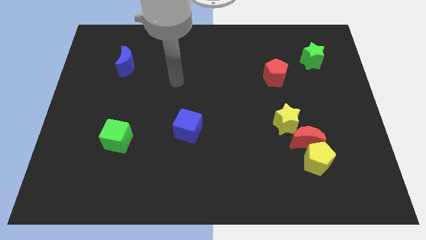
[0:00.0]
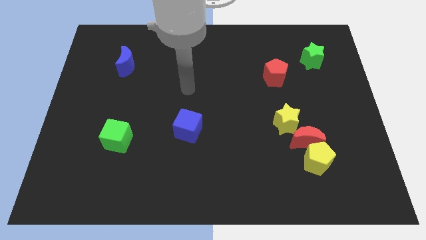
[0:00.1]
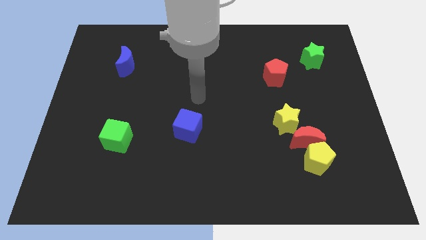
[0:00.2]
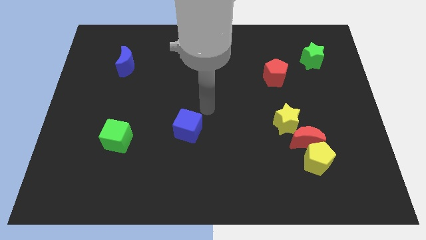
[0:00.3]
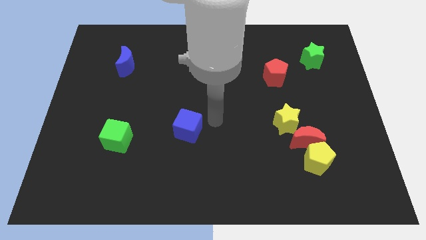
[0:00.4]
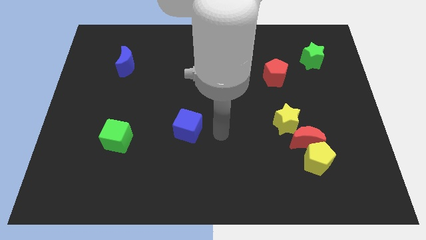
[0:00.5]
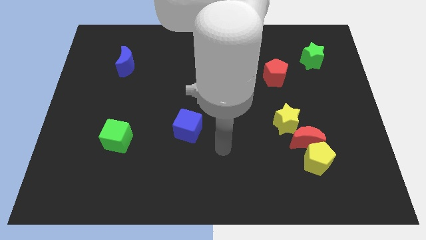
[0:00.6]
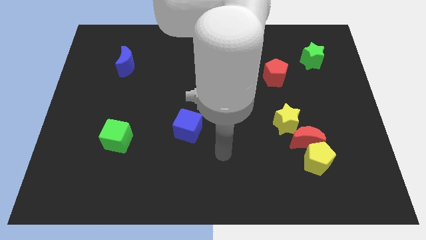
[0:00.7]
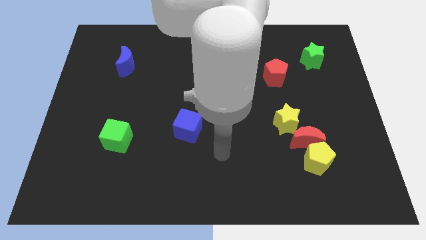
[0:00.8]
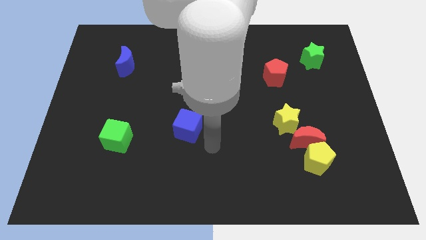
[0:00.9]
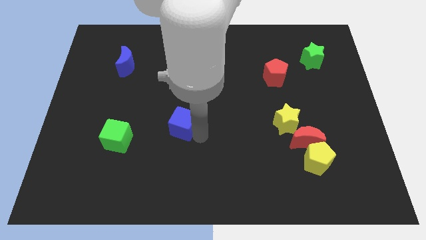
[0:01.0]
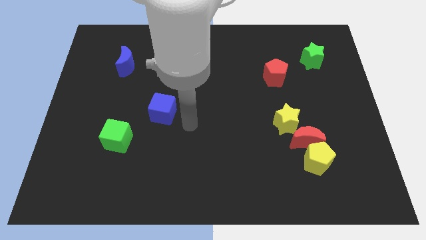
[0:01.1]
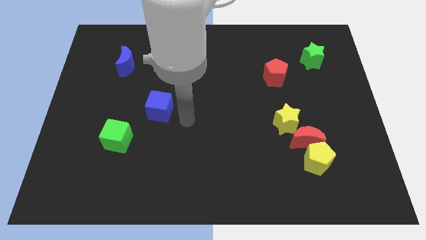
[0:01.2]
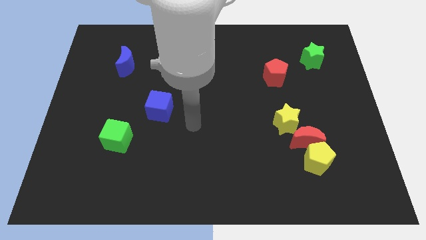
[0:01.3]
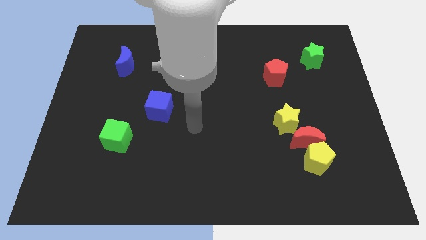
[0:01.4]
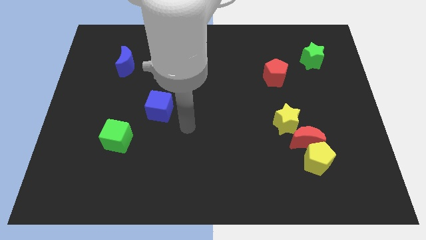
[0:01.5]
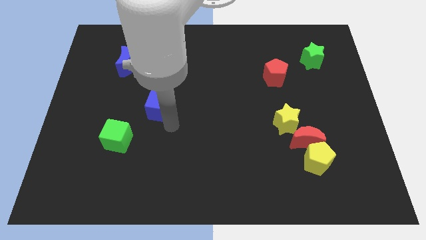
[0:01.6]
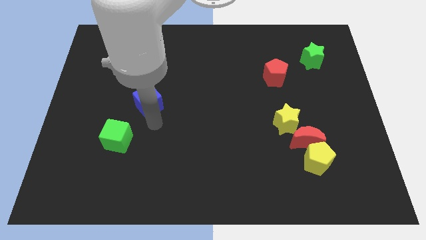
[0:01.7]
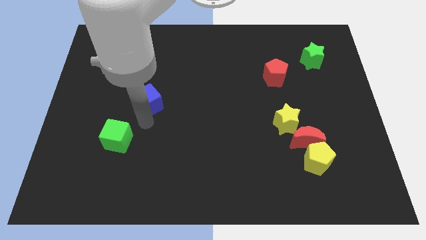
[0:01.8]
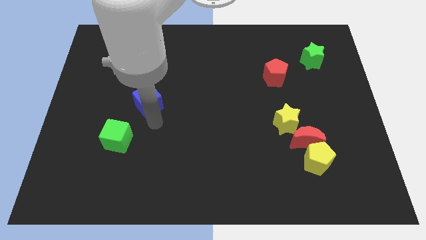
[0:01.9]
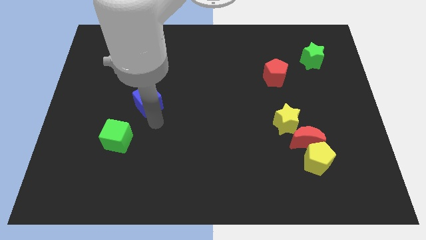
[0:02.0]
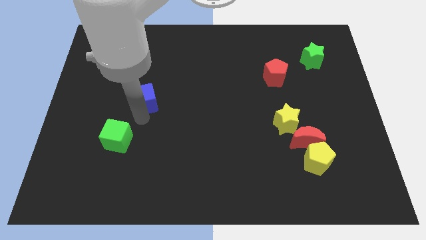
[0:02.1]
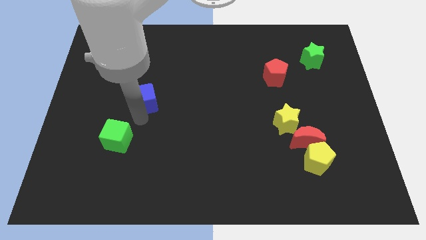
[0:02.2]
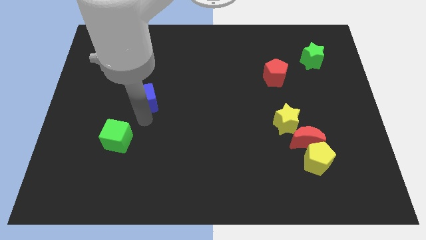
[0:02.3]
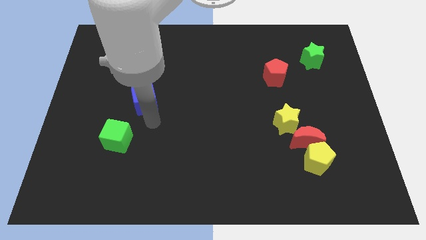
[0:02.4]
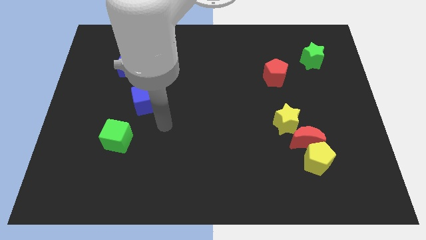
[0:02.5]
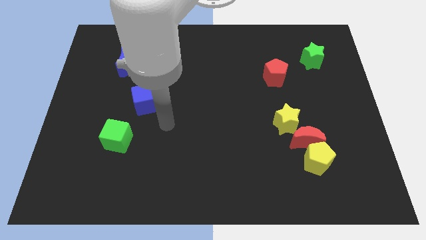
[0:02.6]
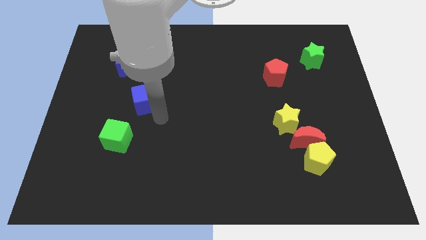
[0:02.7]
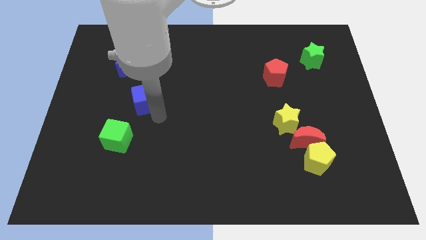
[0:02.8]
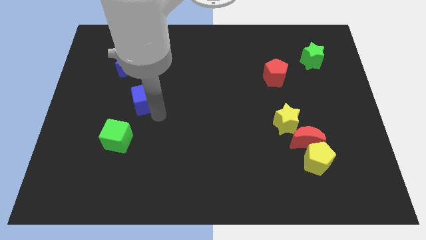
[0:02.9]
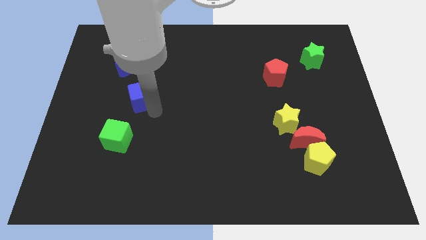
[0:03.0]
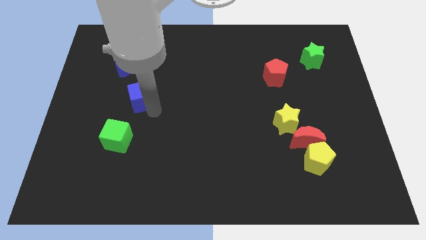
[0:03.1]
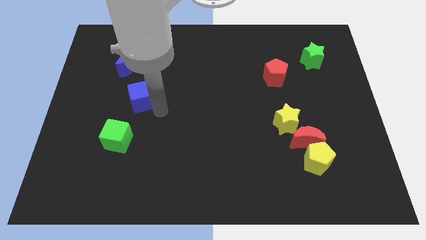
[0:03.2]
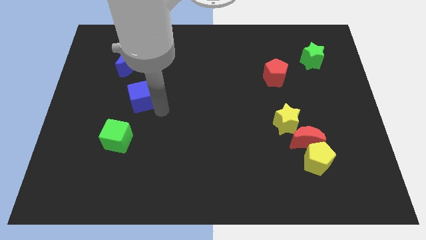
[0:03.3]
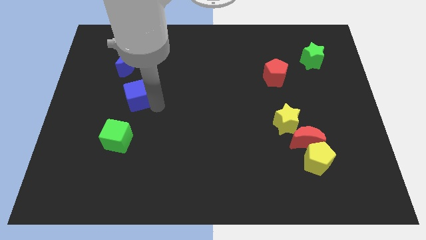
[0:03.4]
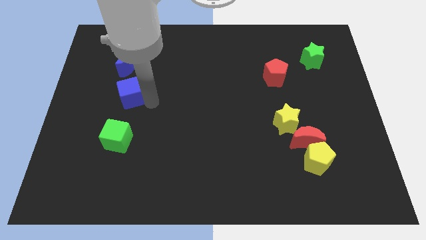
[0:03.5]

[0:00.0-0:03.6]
place the blue cube at the bottom right side of blue crescent

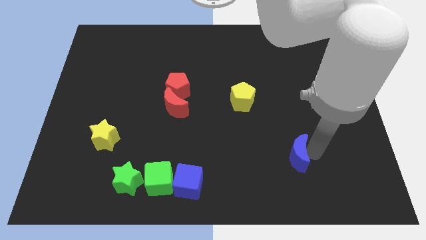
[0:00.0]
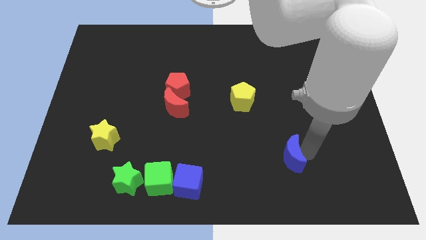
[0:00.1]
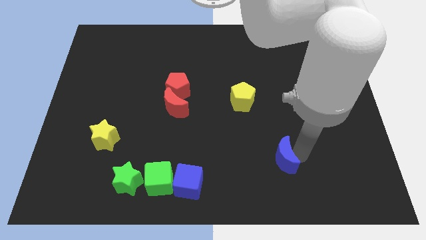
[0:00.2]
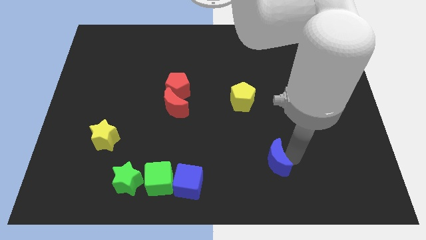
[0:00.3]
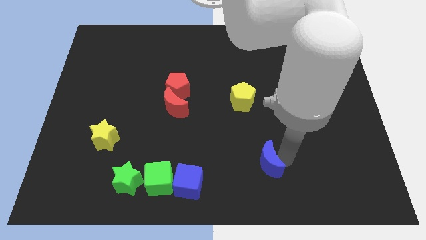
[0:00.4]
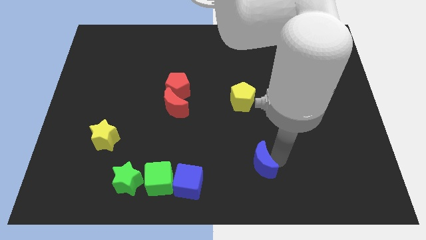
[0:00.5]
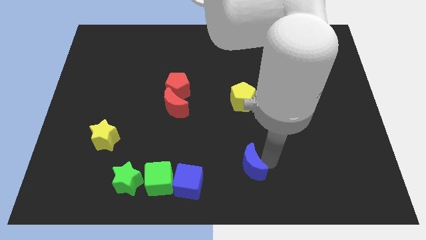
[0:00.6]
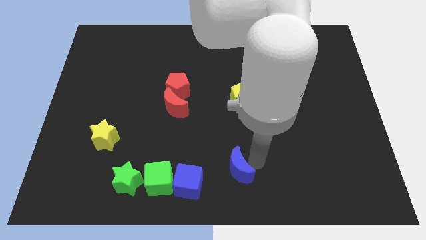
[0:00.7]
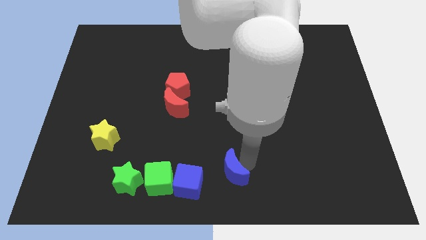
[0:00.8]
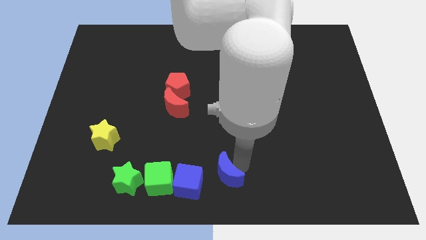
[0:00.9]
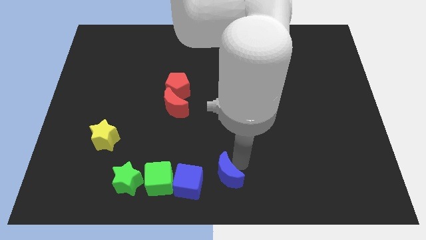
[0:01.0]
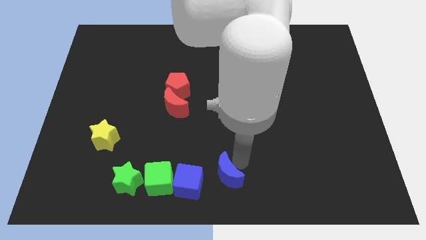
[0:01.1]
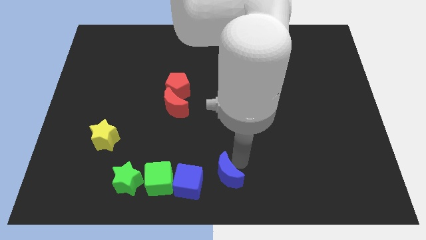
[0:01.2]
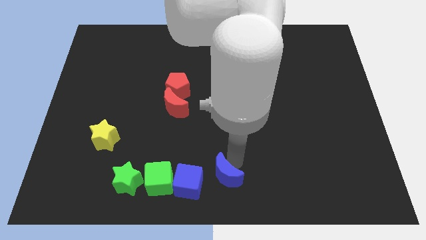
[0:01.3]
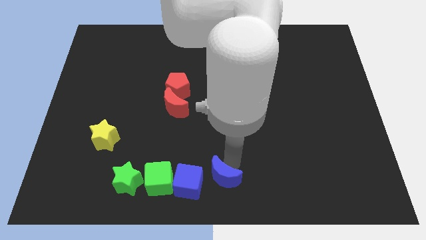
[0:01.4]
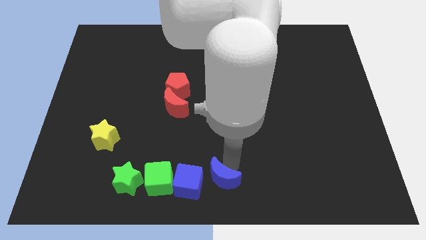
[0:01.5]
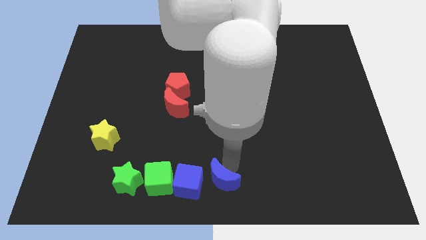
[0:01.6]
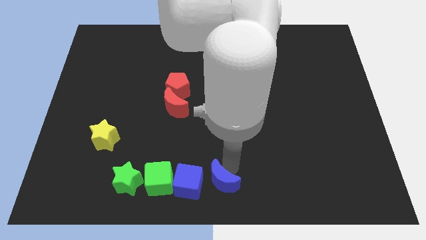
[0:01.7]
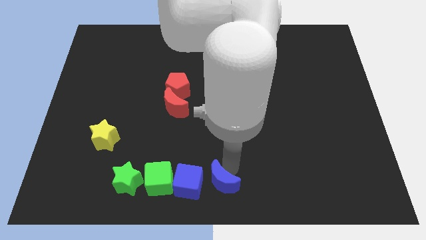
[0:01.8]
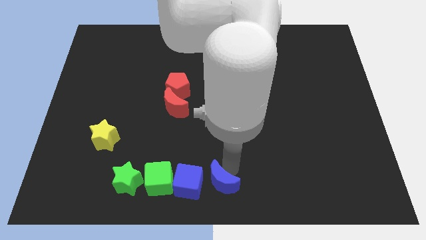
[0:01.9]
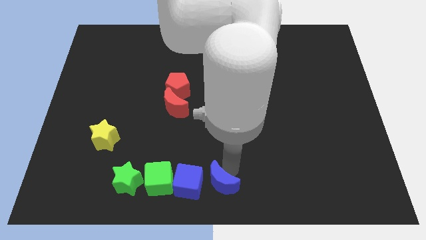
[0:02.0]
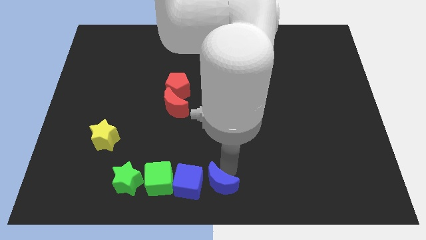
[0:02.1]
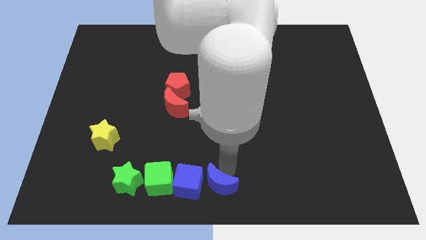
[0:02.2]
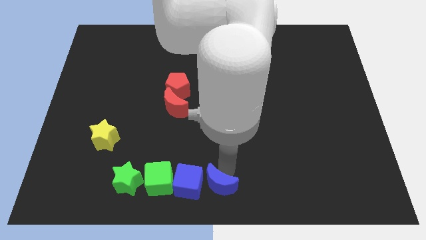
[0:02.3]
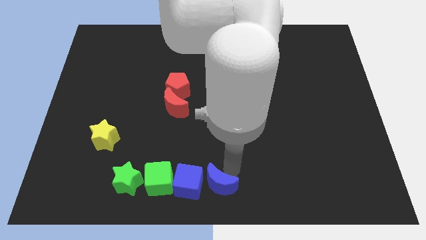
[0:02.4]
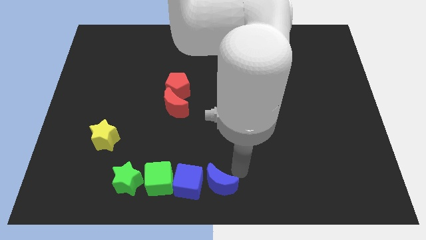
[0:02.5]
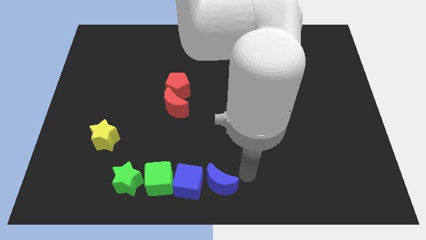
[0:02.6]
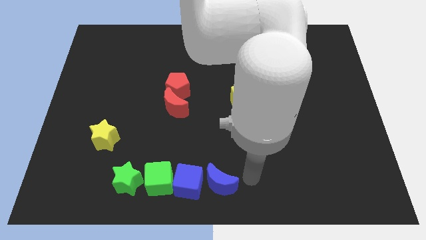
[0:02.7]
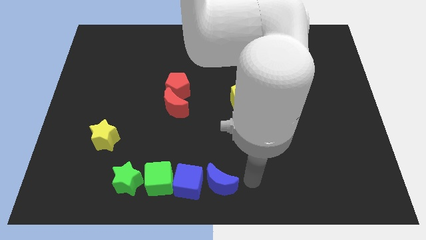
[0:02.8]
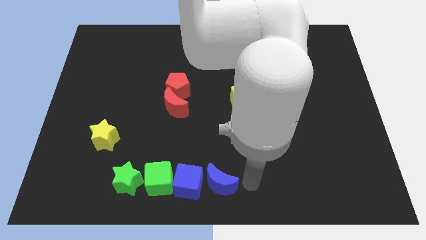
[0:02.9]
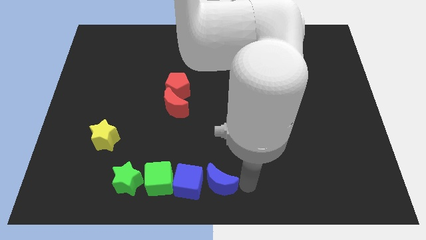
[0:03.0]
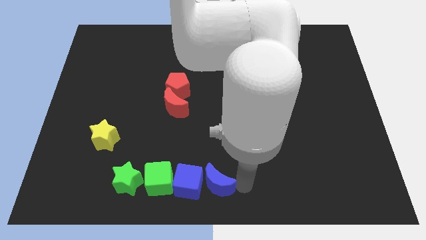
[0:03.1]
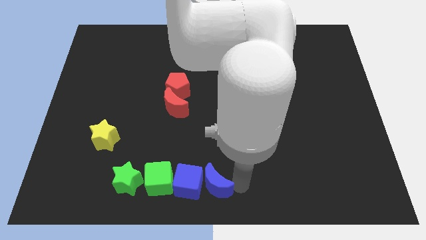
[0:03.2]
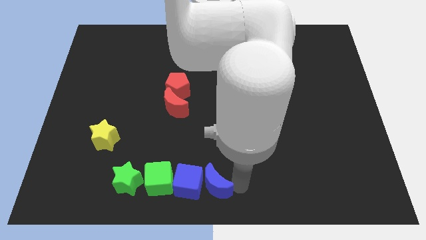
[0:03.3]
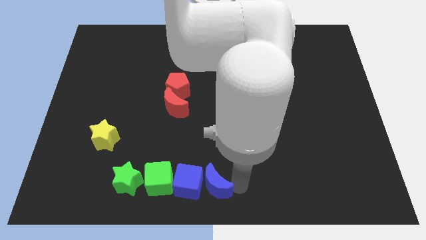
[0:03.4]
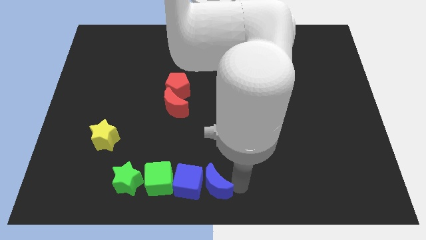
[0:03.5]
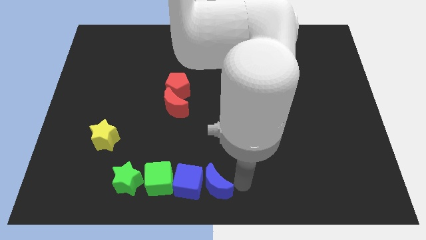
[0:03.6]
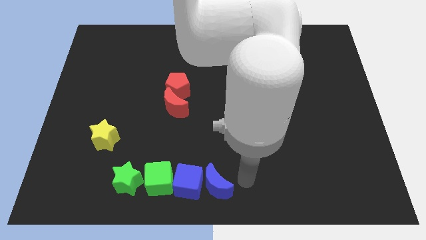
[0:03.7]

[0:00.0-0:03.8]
put the blue crescent to the right side of the blue cube

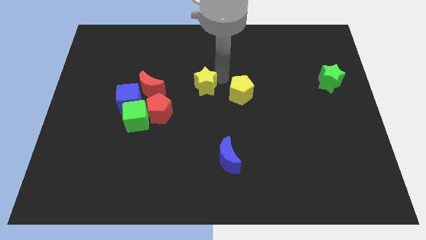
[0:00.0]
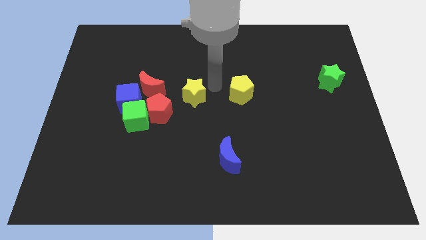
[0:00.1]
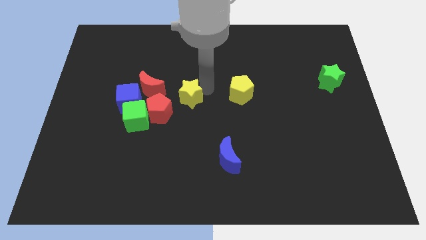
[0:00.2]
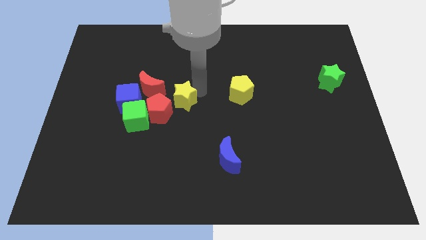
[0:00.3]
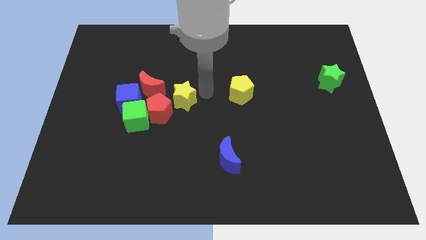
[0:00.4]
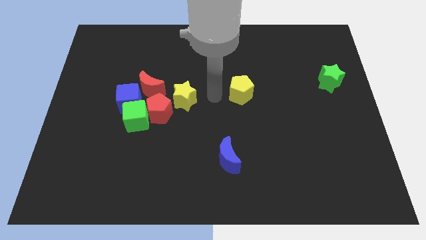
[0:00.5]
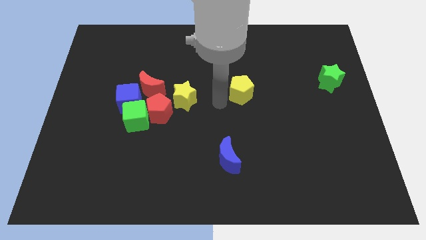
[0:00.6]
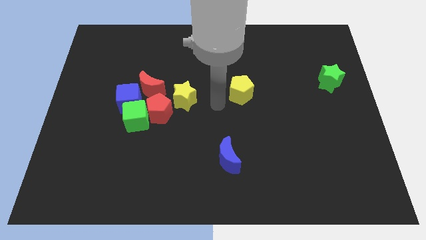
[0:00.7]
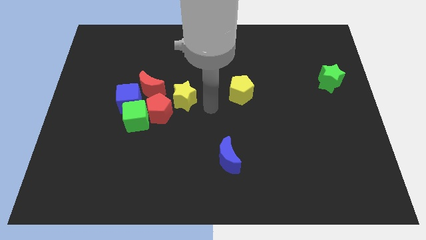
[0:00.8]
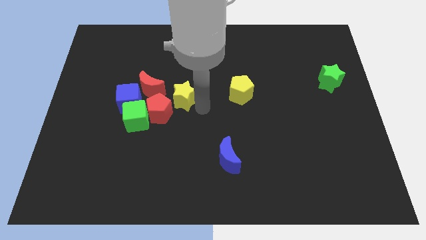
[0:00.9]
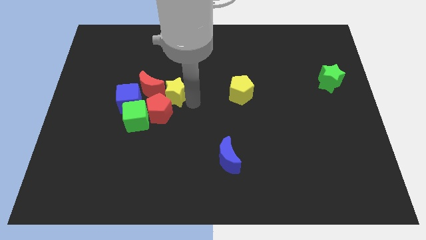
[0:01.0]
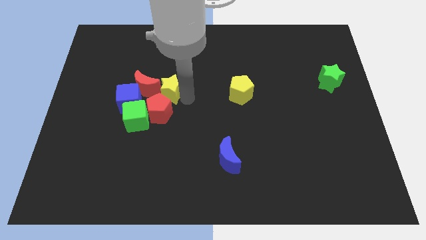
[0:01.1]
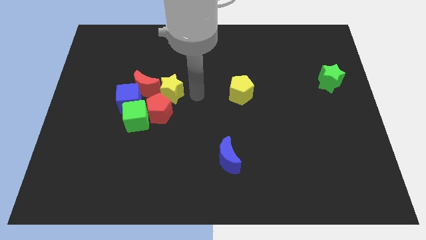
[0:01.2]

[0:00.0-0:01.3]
push the yellow star into the right side of the red crescent

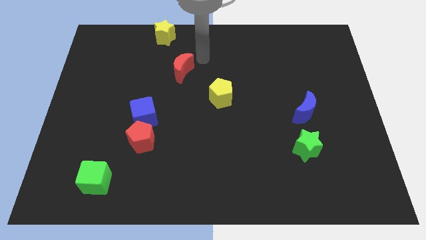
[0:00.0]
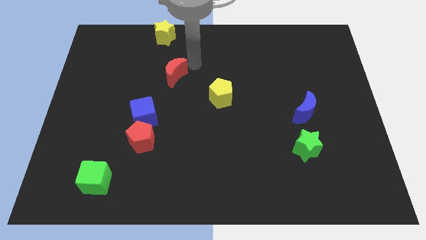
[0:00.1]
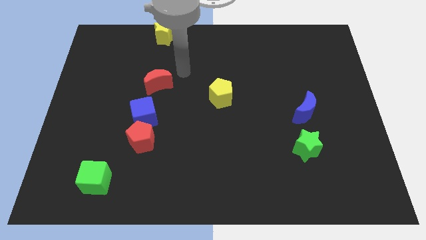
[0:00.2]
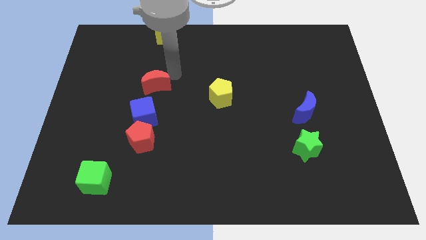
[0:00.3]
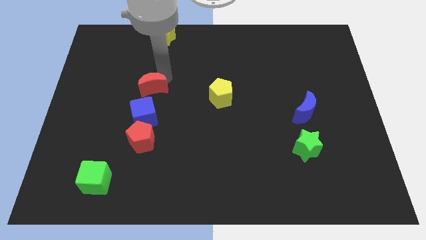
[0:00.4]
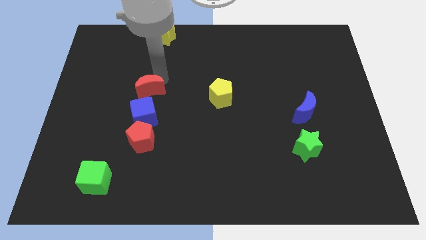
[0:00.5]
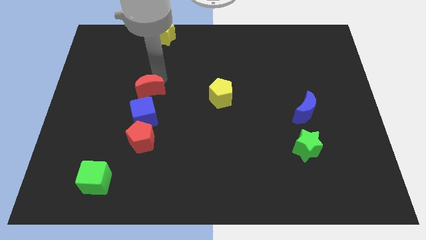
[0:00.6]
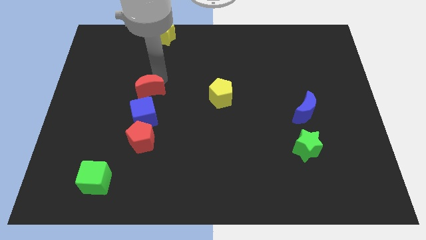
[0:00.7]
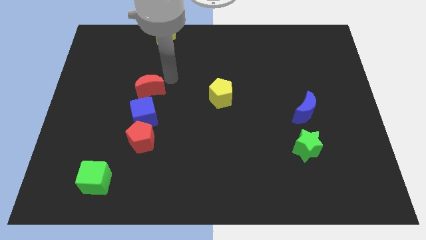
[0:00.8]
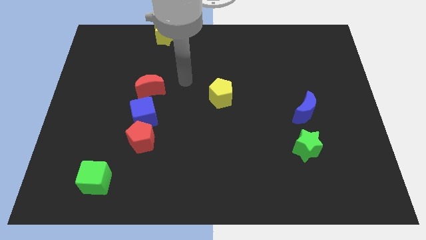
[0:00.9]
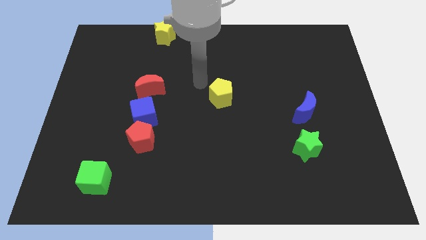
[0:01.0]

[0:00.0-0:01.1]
move red moon above blue cube
